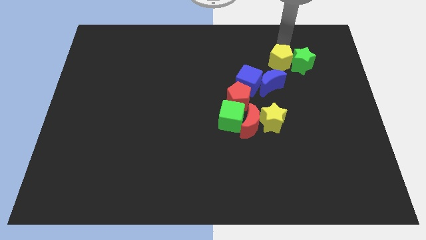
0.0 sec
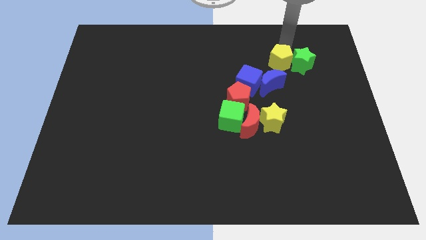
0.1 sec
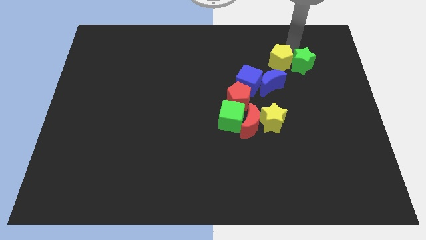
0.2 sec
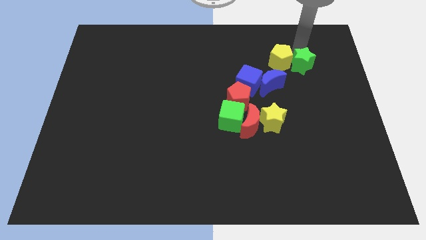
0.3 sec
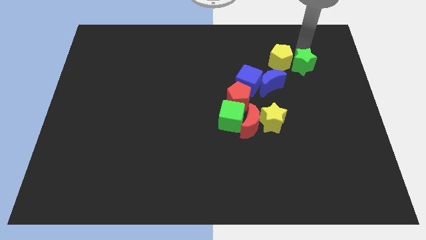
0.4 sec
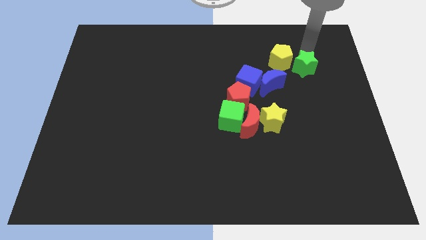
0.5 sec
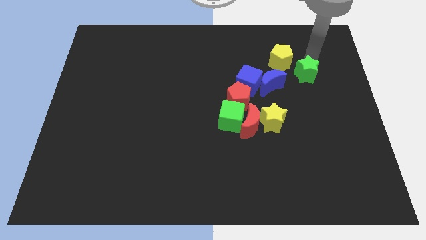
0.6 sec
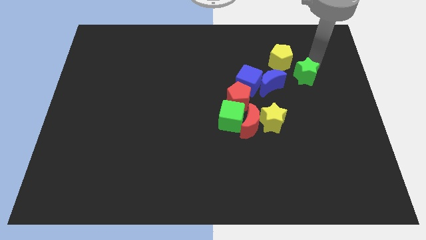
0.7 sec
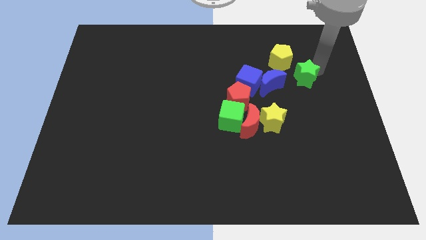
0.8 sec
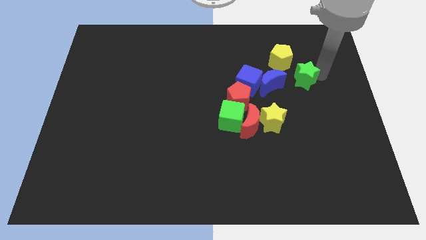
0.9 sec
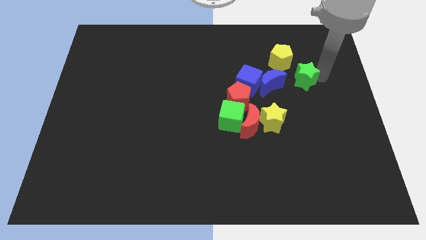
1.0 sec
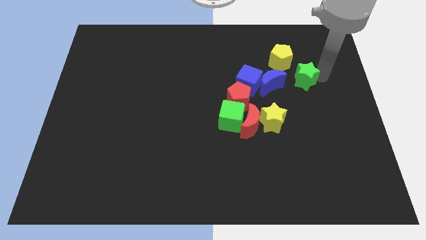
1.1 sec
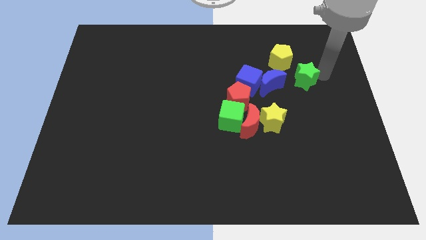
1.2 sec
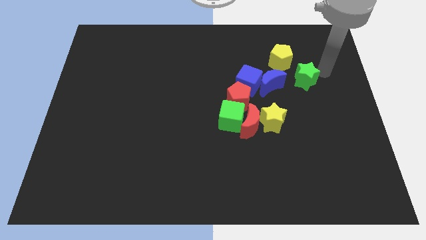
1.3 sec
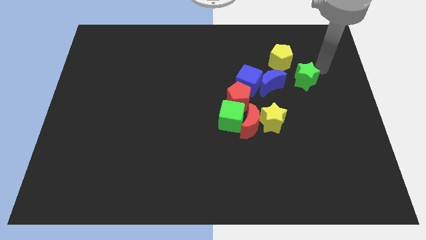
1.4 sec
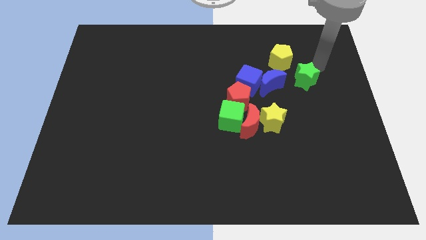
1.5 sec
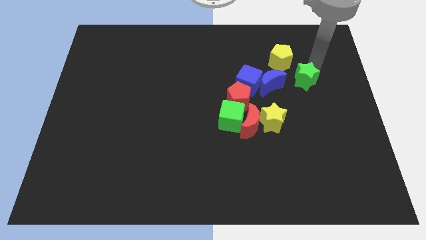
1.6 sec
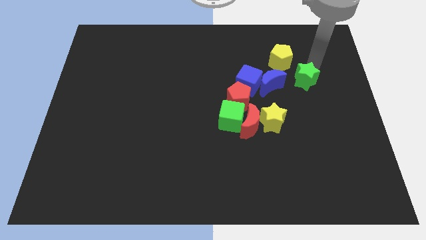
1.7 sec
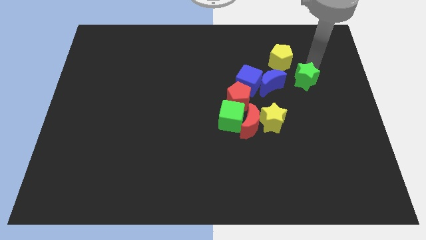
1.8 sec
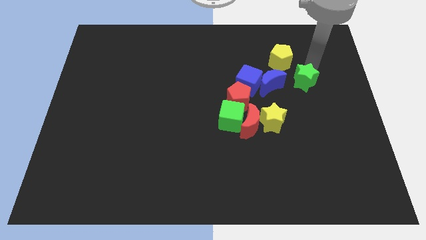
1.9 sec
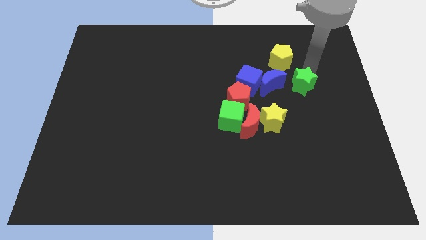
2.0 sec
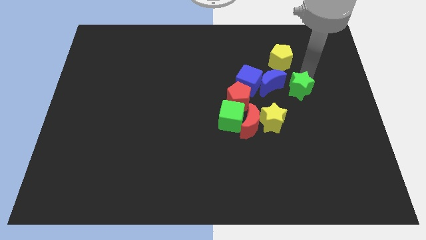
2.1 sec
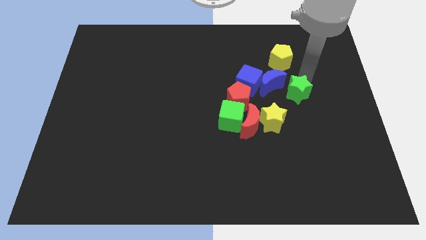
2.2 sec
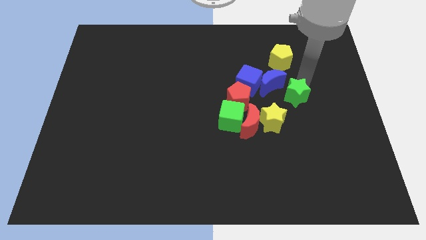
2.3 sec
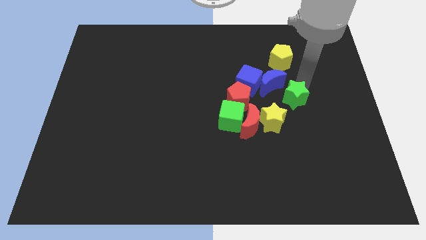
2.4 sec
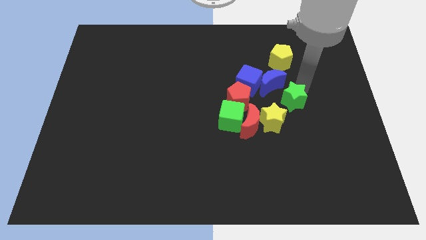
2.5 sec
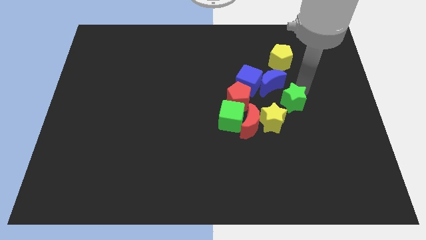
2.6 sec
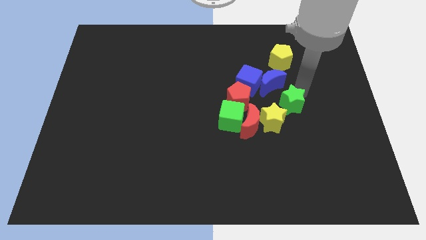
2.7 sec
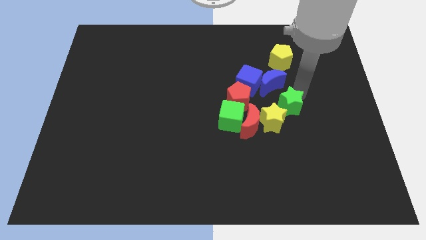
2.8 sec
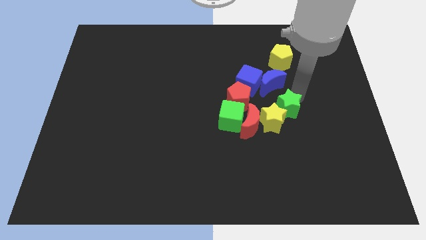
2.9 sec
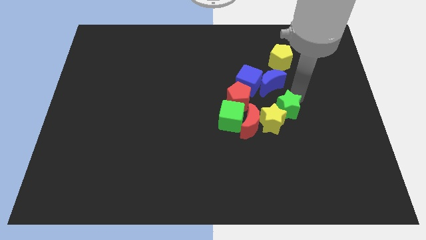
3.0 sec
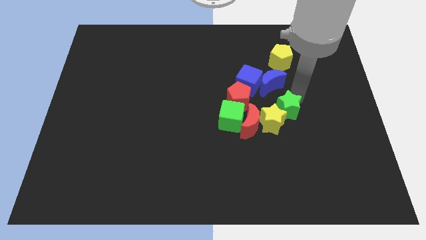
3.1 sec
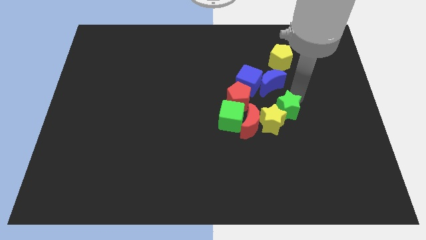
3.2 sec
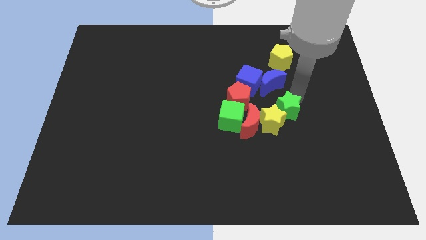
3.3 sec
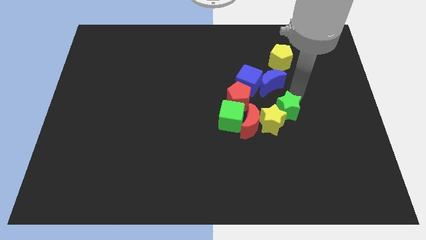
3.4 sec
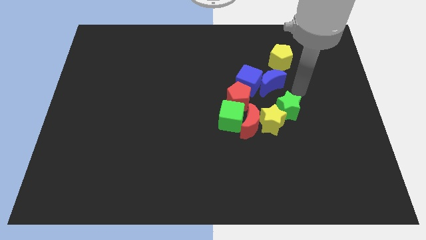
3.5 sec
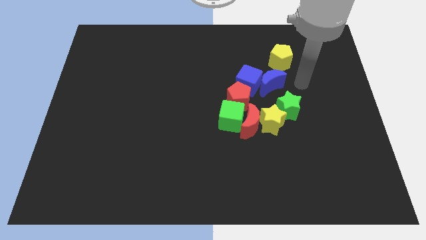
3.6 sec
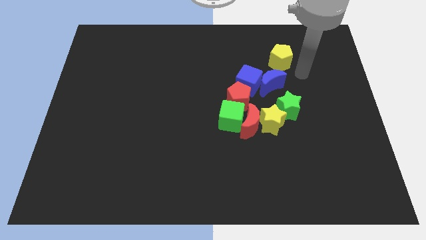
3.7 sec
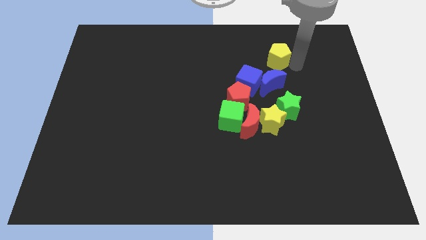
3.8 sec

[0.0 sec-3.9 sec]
move the green star into the yellow star

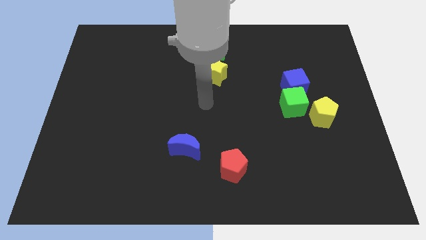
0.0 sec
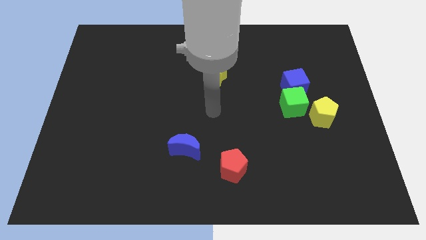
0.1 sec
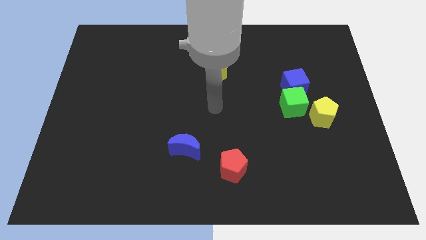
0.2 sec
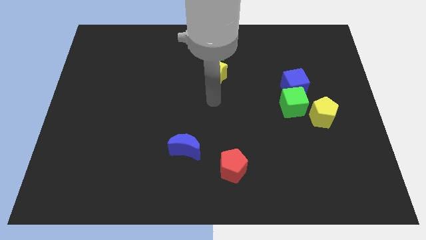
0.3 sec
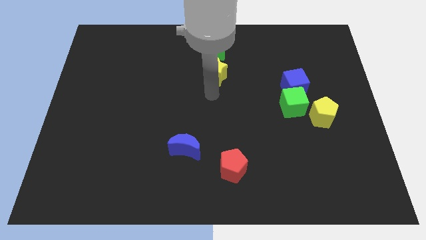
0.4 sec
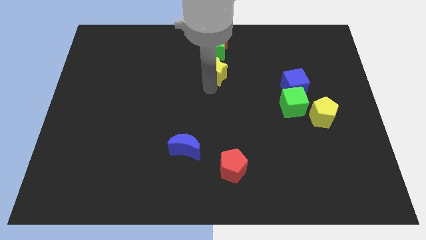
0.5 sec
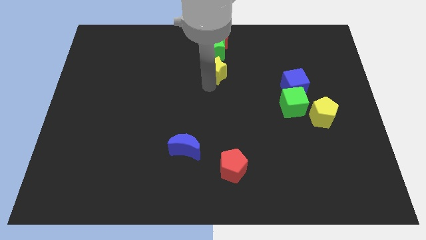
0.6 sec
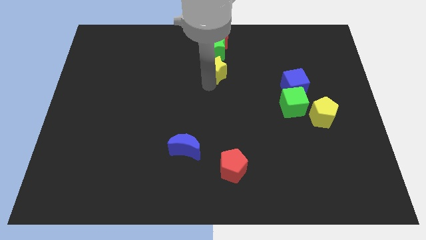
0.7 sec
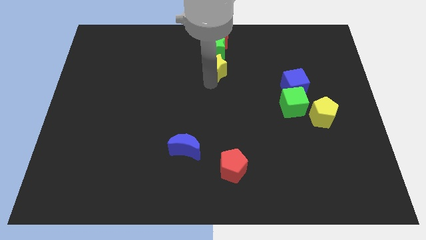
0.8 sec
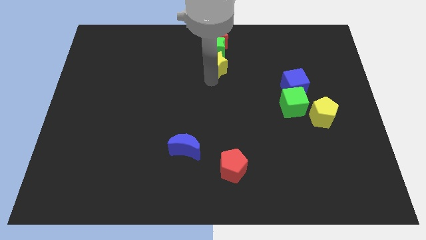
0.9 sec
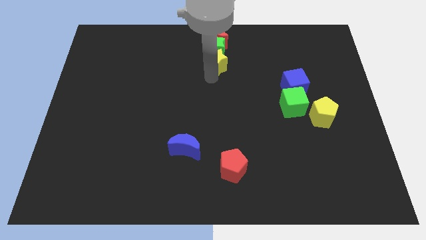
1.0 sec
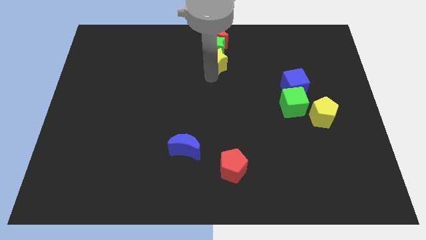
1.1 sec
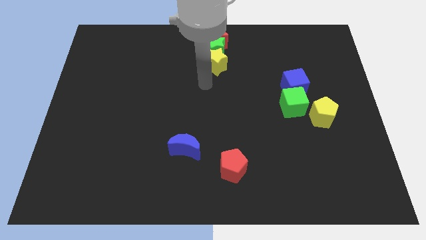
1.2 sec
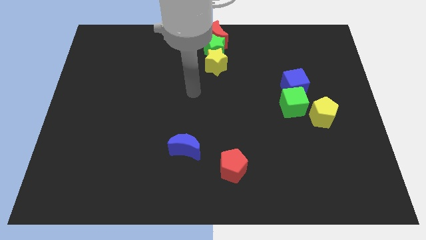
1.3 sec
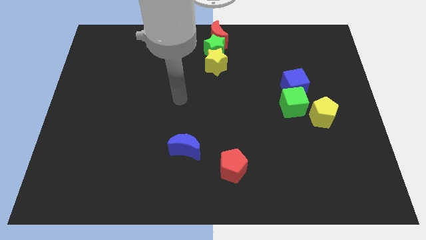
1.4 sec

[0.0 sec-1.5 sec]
push yellow star into green star

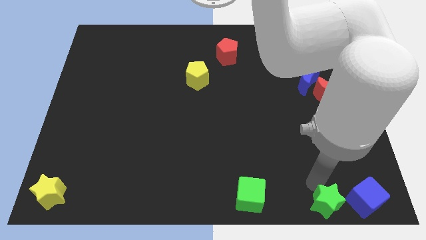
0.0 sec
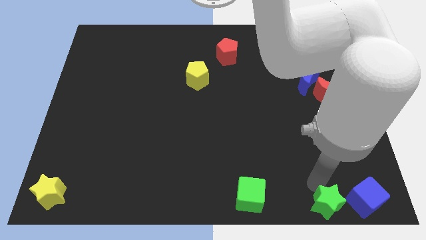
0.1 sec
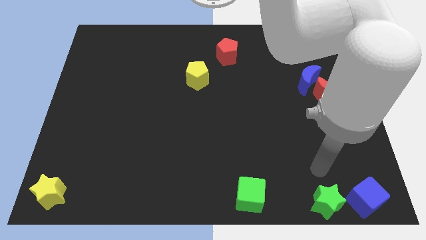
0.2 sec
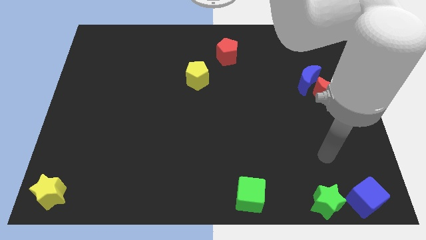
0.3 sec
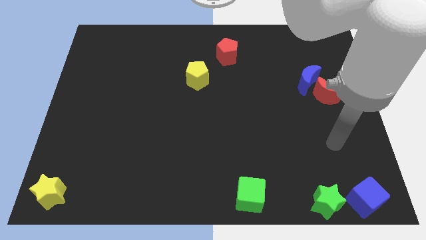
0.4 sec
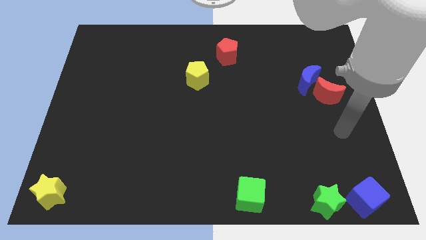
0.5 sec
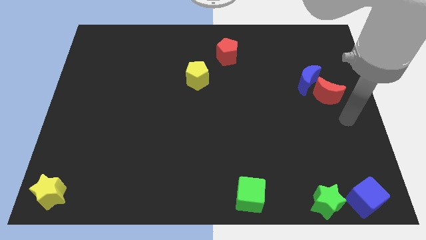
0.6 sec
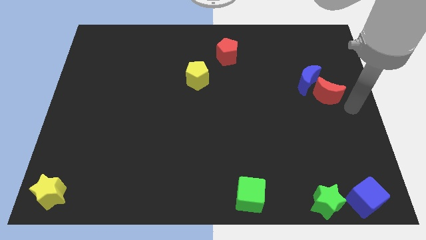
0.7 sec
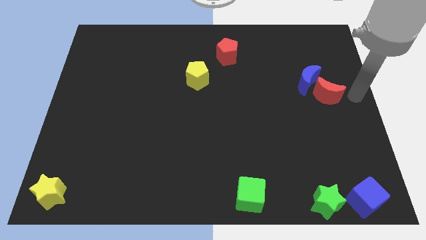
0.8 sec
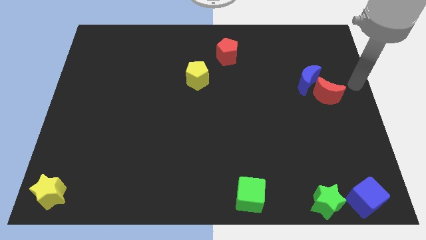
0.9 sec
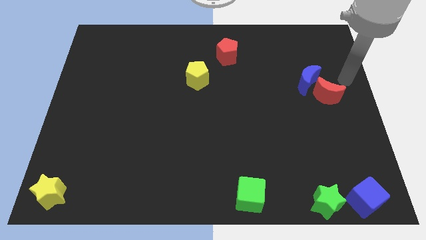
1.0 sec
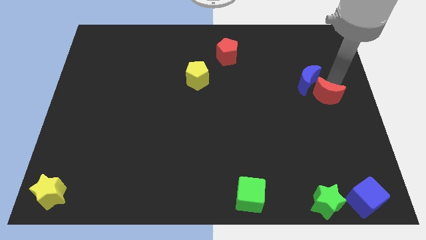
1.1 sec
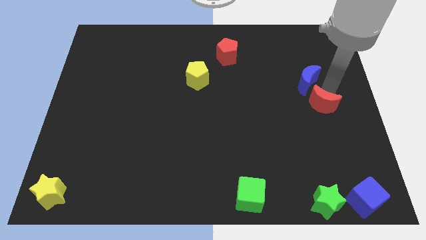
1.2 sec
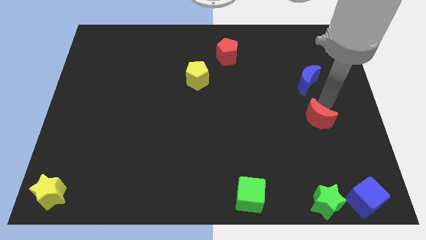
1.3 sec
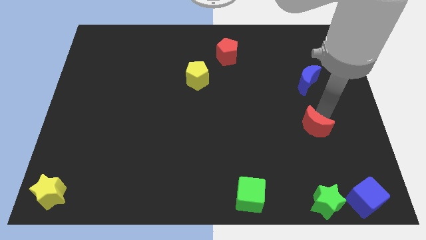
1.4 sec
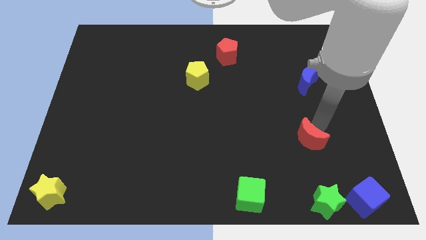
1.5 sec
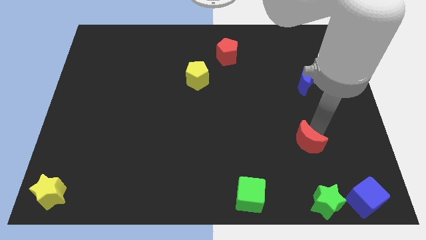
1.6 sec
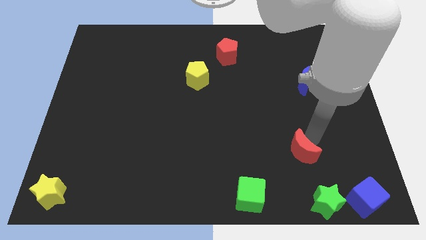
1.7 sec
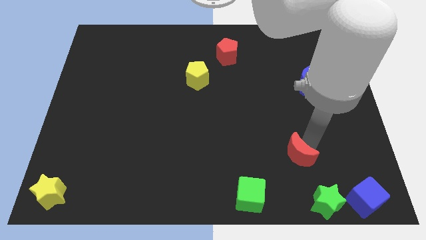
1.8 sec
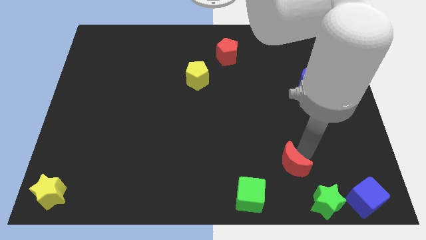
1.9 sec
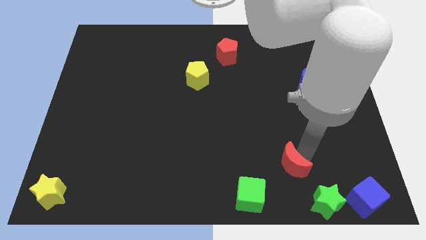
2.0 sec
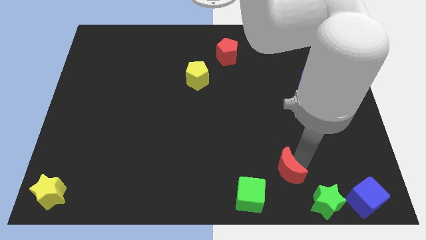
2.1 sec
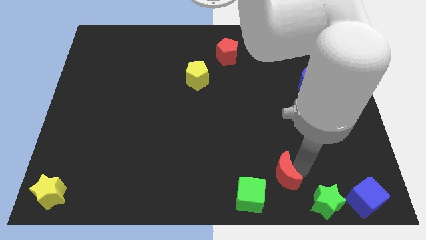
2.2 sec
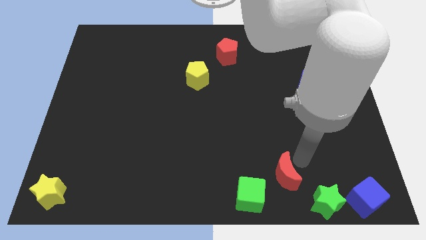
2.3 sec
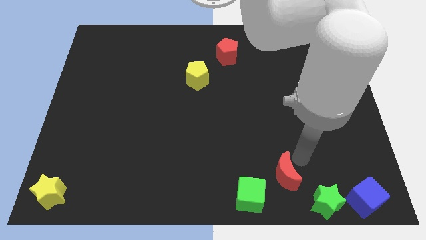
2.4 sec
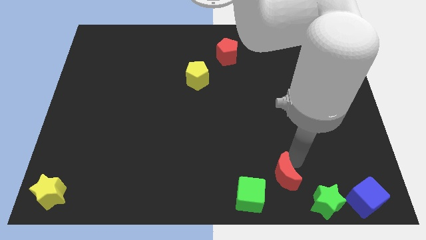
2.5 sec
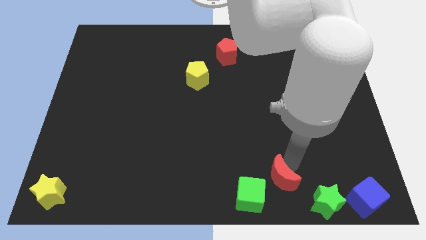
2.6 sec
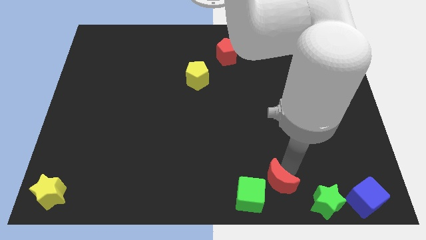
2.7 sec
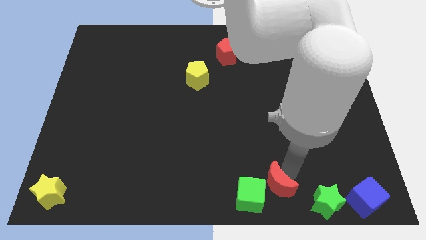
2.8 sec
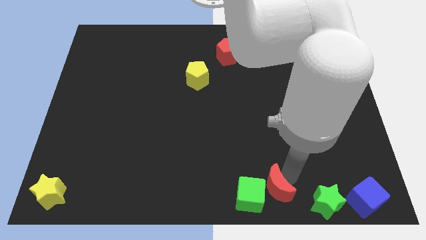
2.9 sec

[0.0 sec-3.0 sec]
move your arm away from the green star

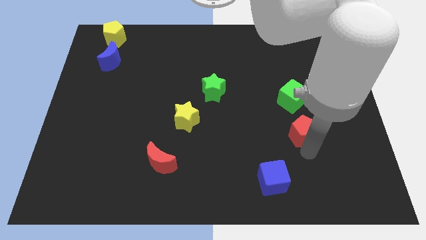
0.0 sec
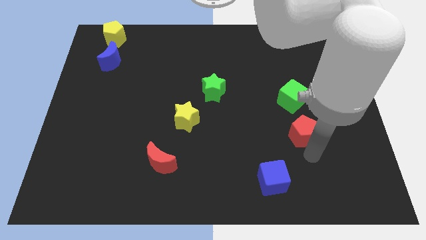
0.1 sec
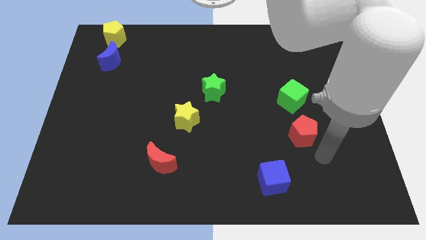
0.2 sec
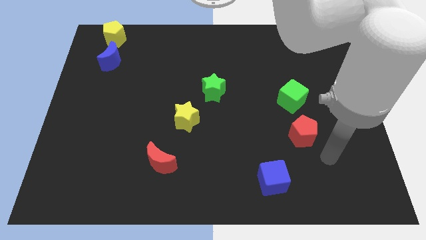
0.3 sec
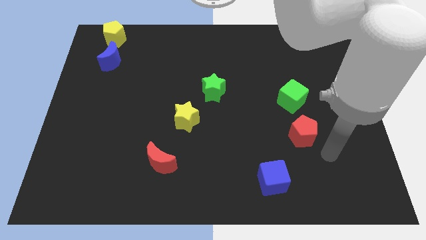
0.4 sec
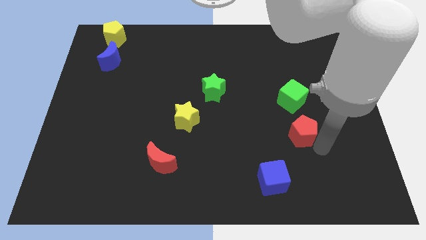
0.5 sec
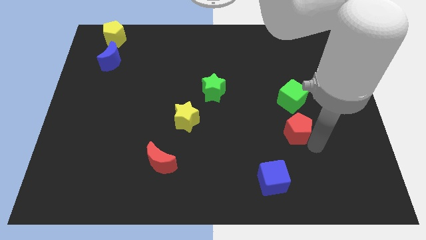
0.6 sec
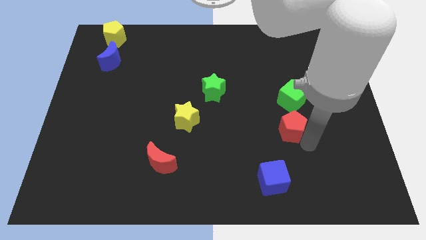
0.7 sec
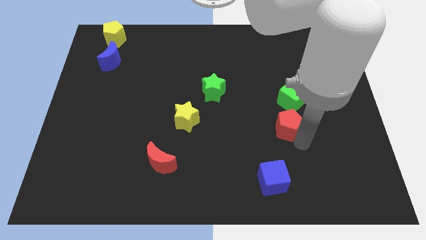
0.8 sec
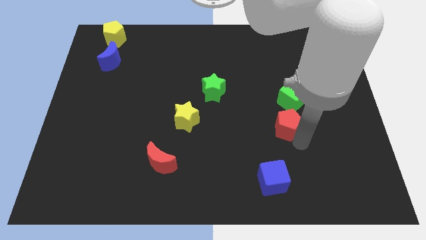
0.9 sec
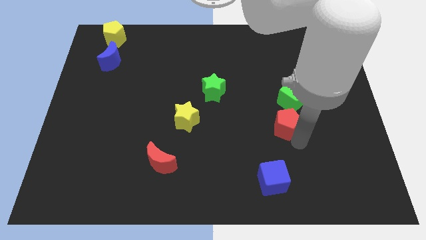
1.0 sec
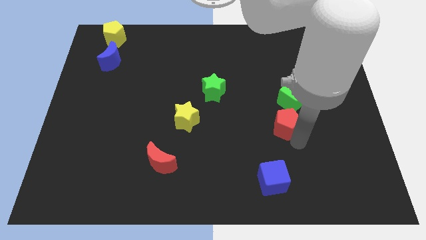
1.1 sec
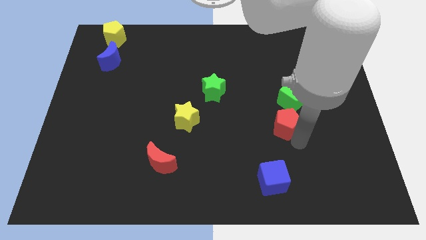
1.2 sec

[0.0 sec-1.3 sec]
place the red pentagon below left to the green cube
